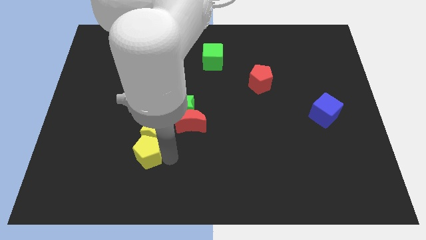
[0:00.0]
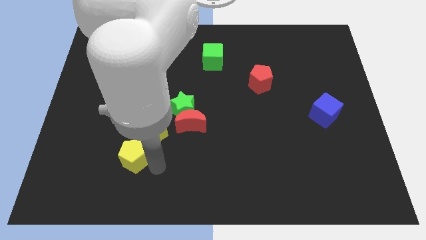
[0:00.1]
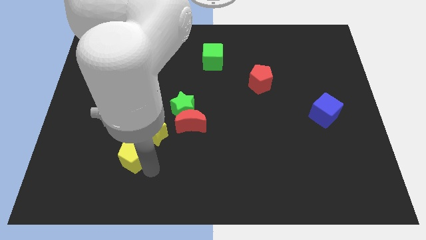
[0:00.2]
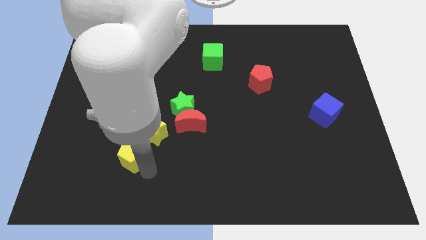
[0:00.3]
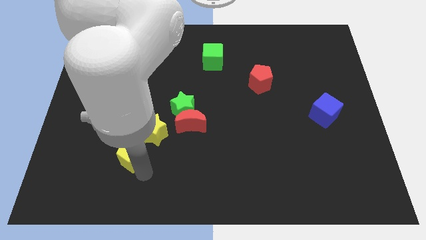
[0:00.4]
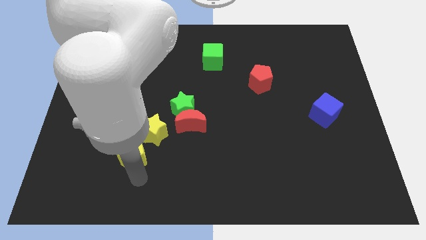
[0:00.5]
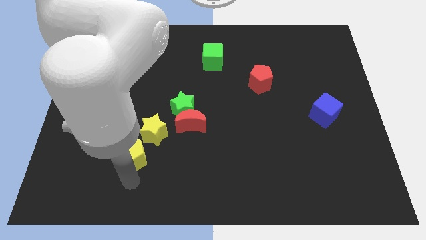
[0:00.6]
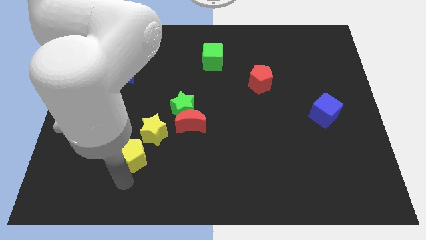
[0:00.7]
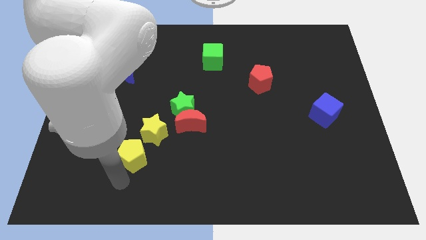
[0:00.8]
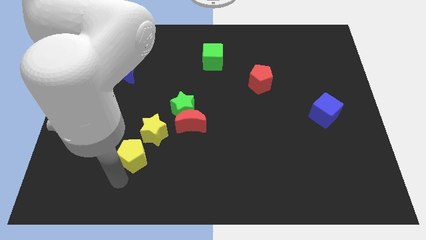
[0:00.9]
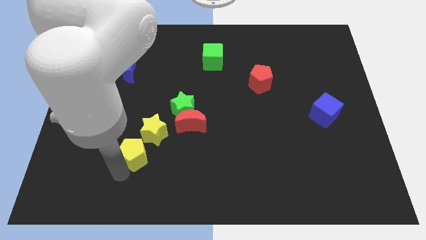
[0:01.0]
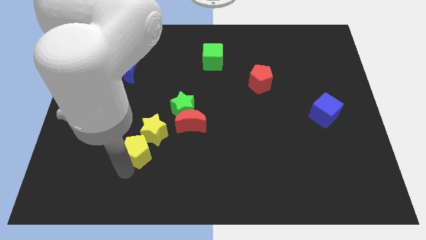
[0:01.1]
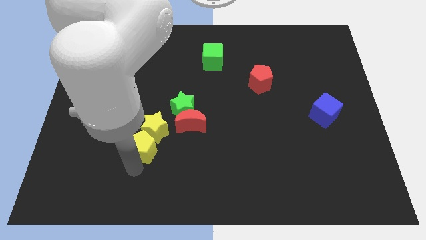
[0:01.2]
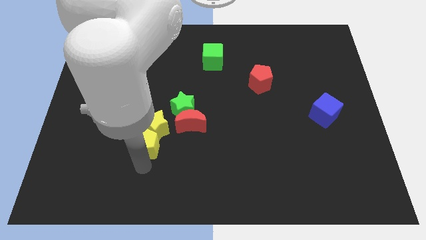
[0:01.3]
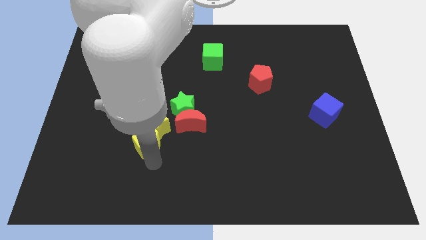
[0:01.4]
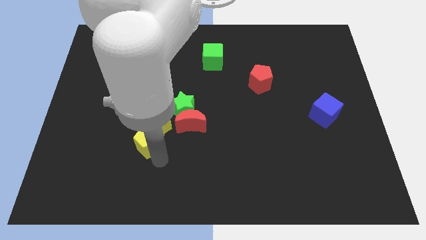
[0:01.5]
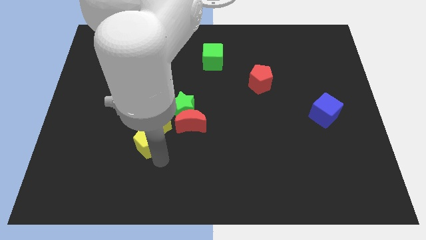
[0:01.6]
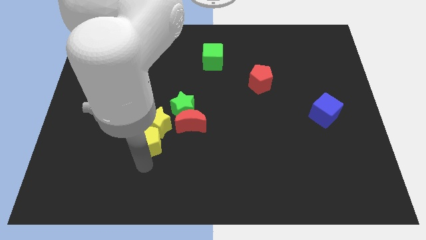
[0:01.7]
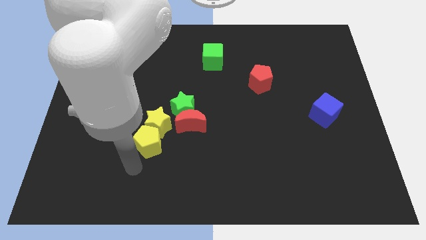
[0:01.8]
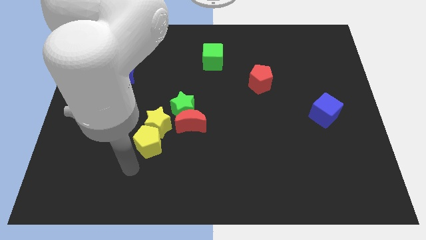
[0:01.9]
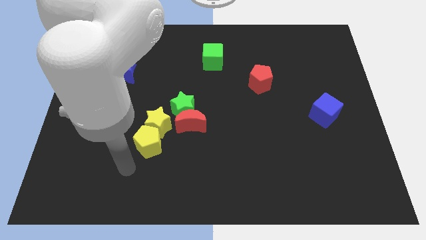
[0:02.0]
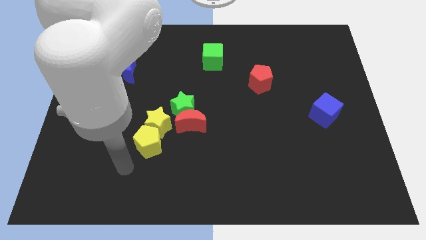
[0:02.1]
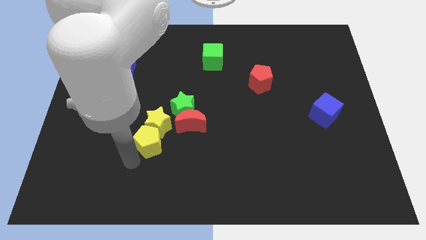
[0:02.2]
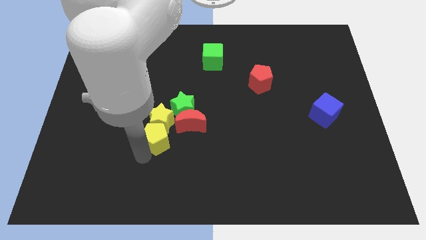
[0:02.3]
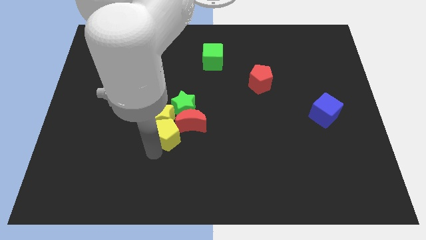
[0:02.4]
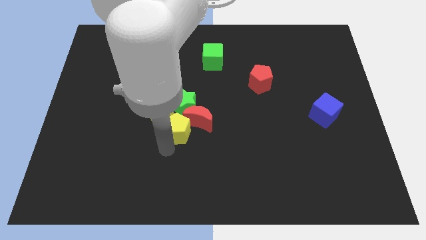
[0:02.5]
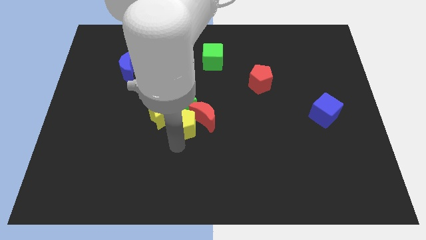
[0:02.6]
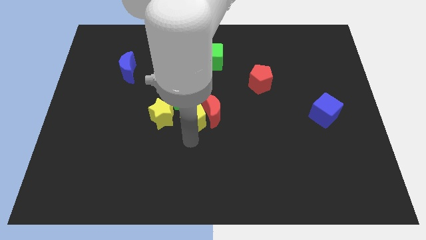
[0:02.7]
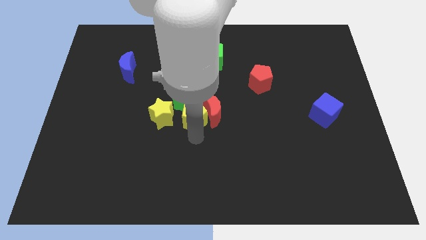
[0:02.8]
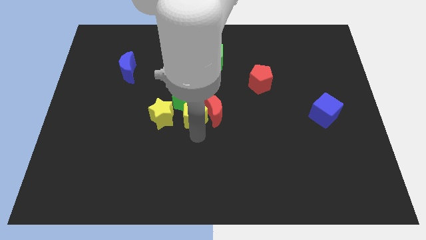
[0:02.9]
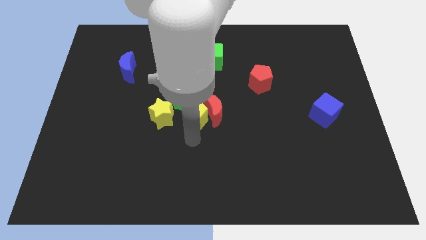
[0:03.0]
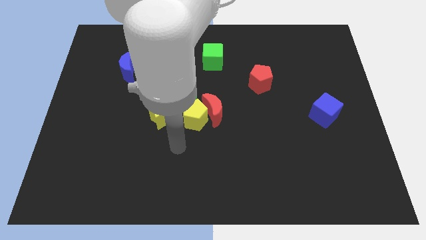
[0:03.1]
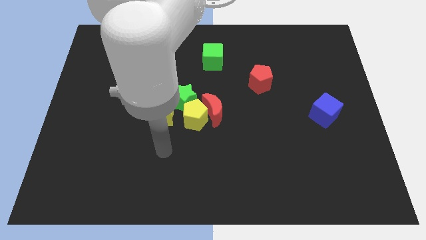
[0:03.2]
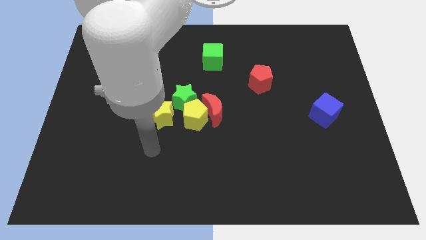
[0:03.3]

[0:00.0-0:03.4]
push the yellow pentagon into the red moon

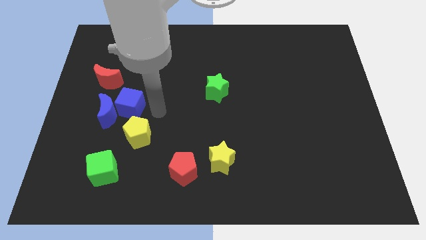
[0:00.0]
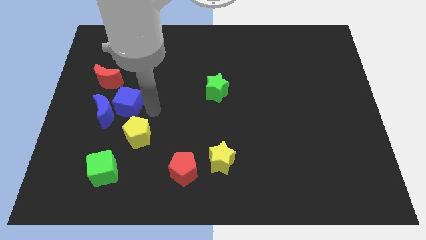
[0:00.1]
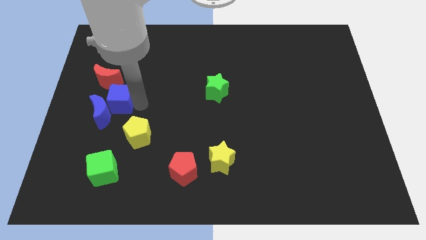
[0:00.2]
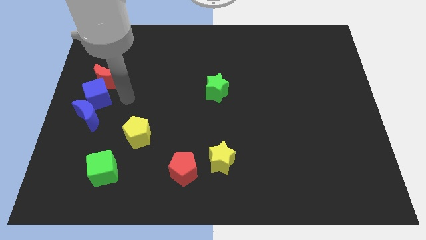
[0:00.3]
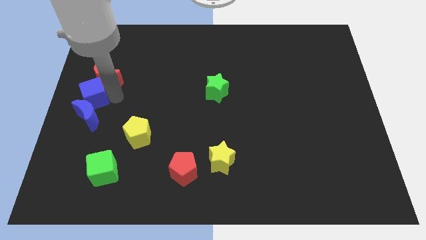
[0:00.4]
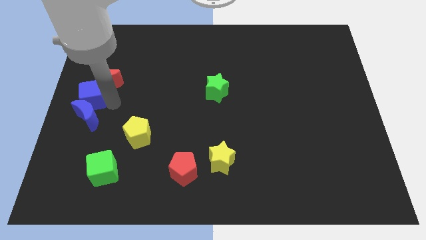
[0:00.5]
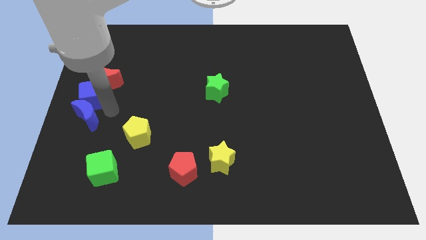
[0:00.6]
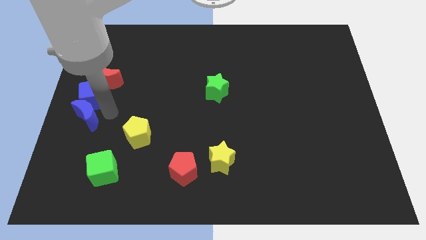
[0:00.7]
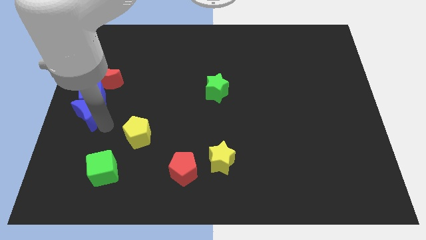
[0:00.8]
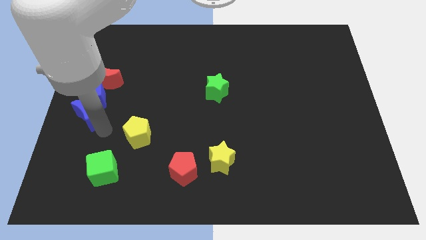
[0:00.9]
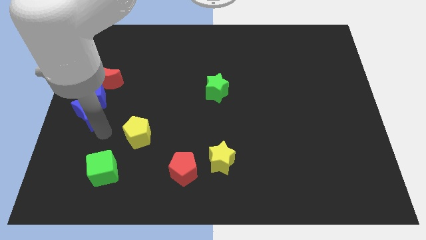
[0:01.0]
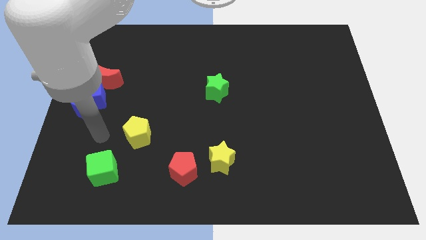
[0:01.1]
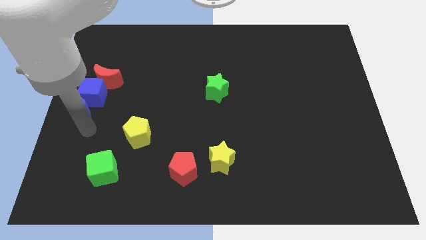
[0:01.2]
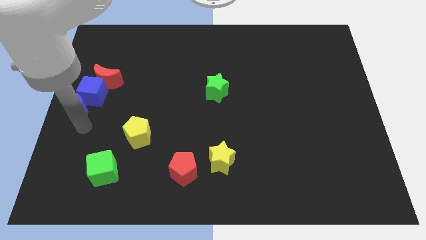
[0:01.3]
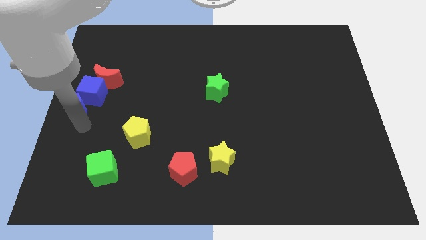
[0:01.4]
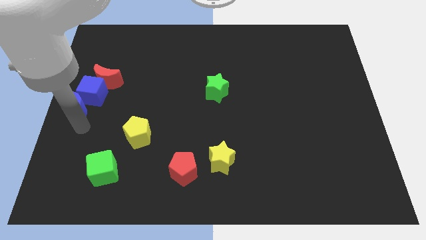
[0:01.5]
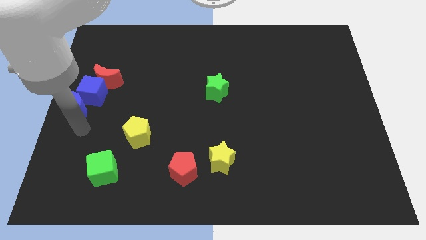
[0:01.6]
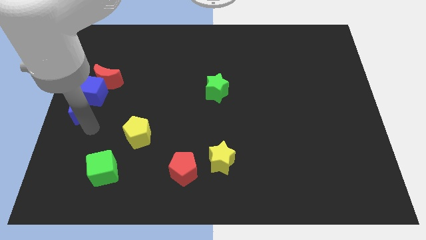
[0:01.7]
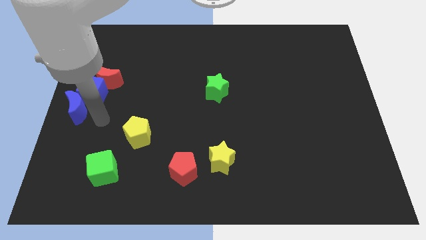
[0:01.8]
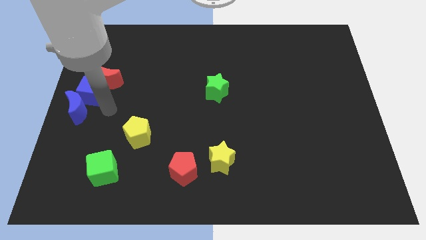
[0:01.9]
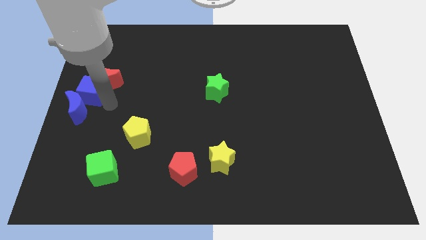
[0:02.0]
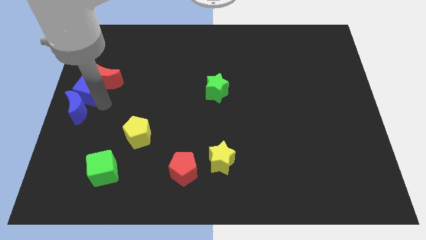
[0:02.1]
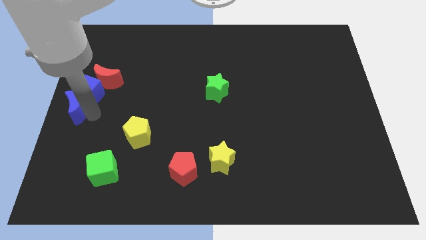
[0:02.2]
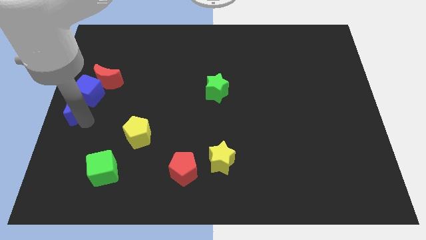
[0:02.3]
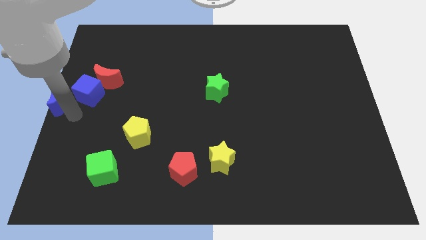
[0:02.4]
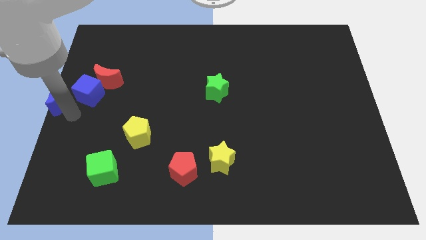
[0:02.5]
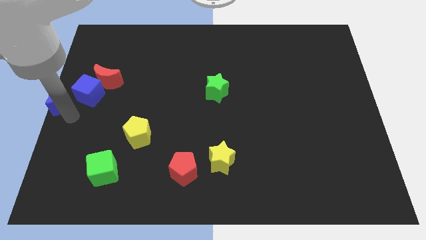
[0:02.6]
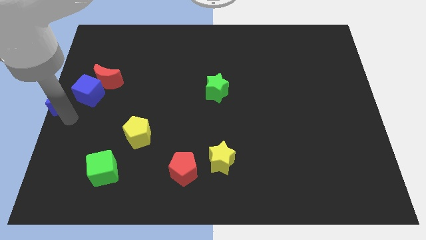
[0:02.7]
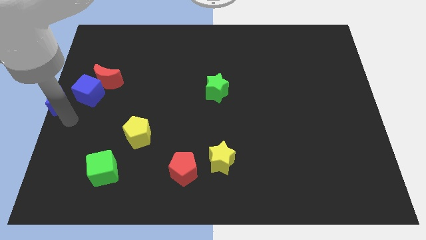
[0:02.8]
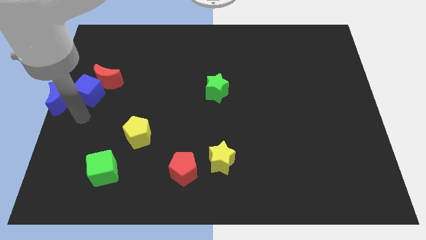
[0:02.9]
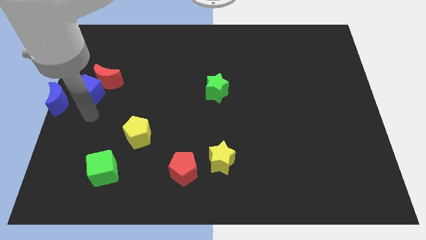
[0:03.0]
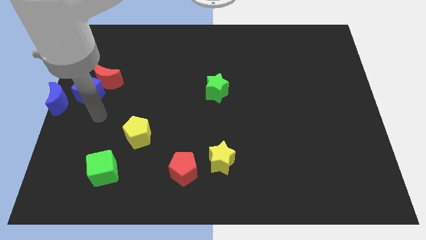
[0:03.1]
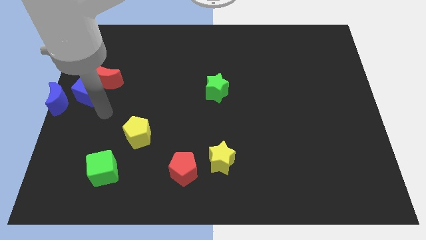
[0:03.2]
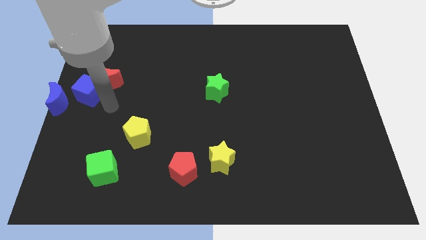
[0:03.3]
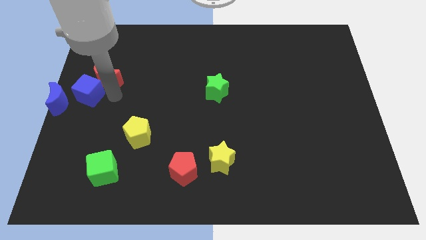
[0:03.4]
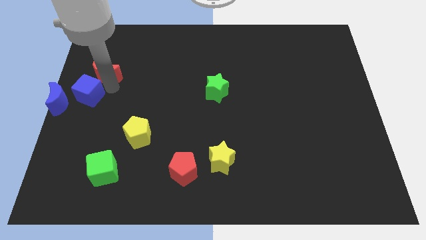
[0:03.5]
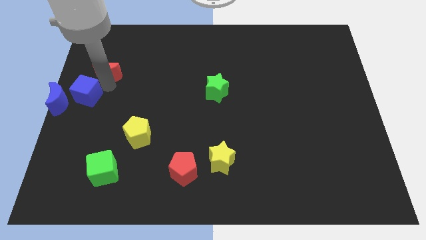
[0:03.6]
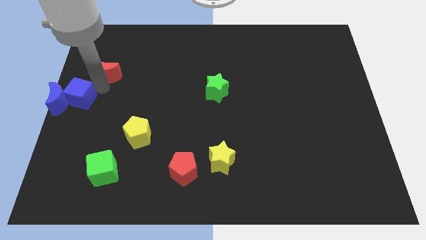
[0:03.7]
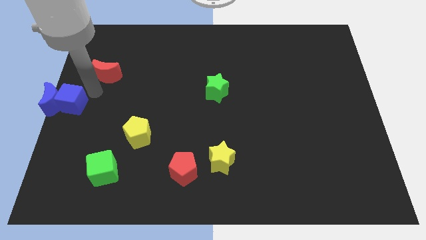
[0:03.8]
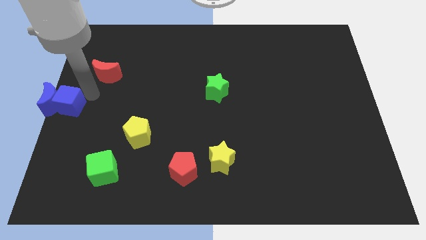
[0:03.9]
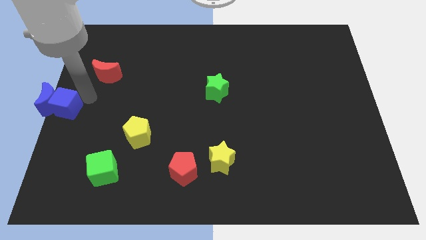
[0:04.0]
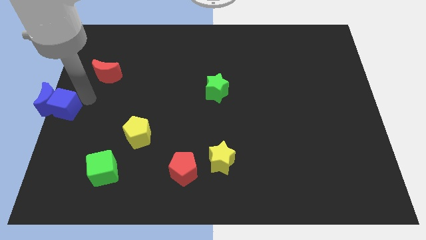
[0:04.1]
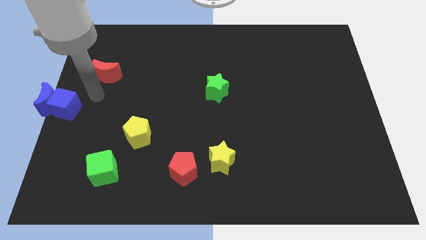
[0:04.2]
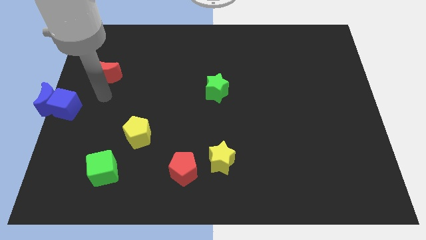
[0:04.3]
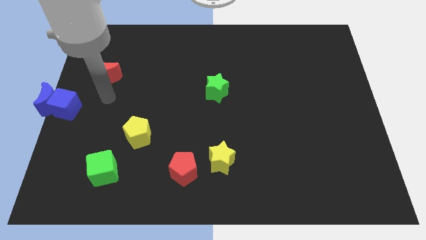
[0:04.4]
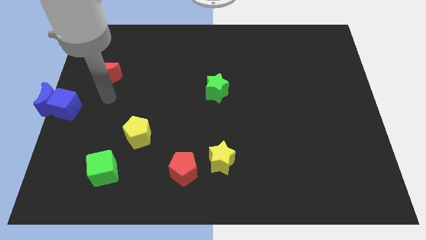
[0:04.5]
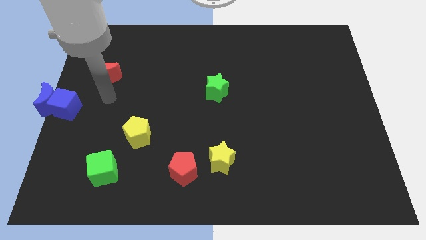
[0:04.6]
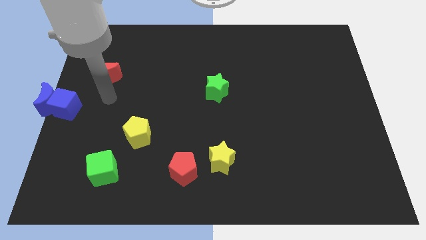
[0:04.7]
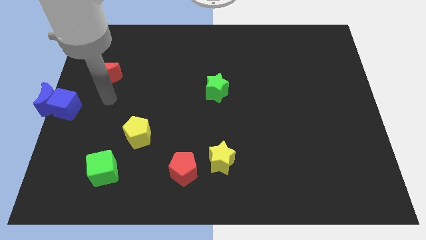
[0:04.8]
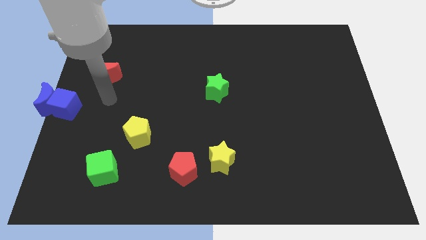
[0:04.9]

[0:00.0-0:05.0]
push the blue blocks to the center left

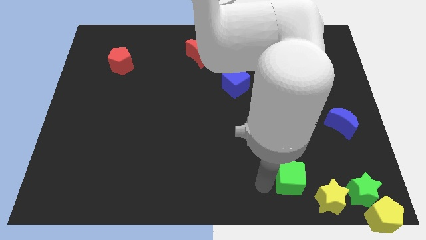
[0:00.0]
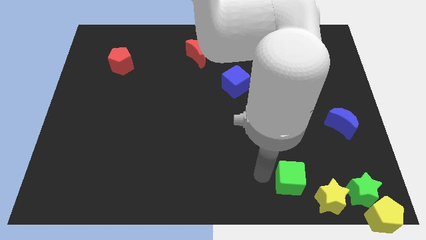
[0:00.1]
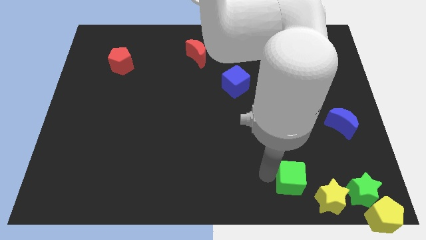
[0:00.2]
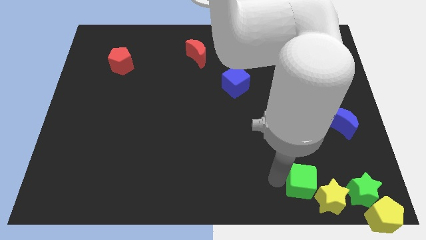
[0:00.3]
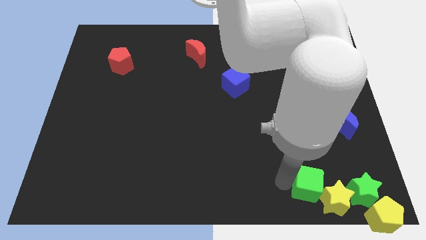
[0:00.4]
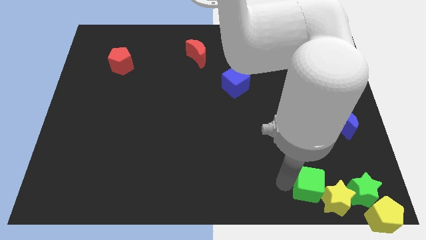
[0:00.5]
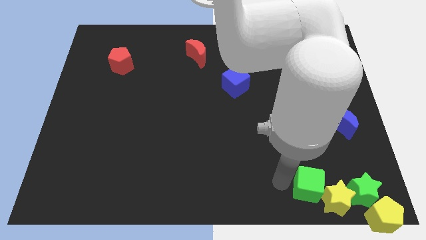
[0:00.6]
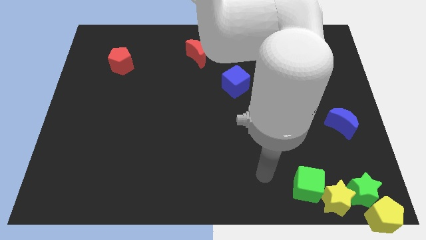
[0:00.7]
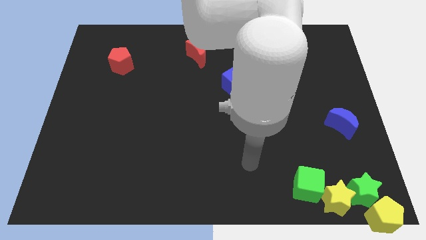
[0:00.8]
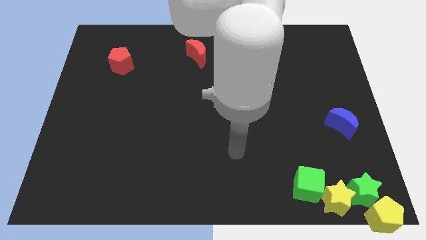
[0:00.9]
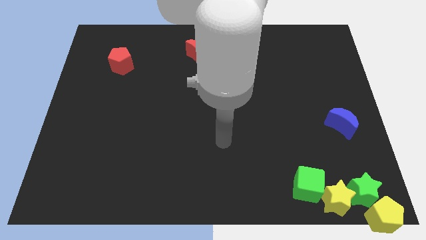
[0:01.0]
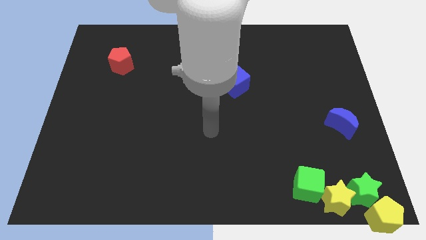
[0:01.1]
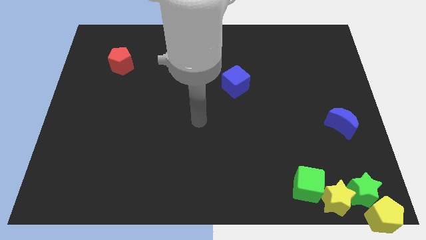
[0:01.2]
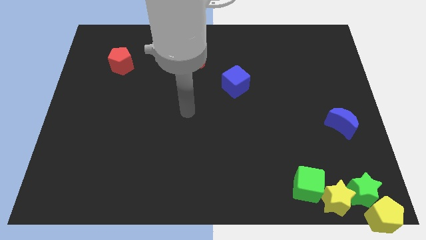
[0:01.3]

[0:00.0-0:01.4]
push green cube into yellow star
